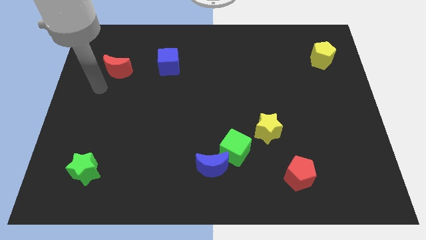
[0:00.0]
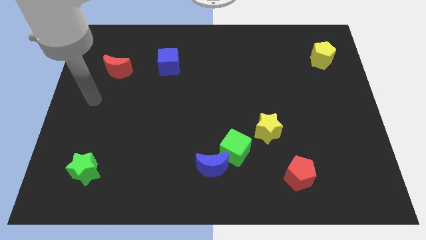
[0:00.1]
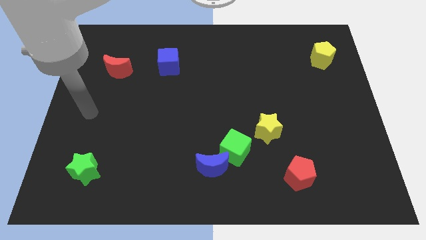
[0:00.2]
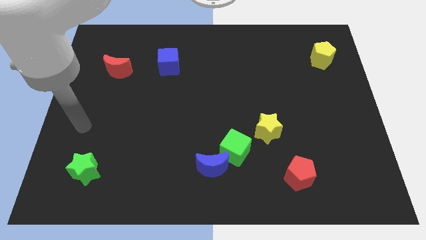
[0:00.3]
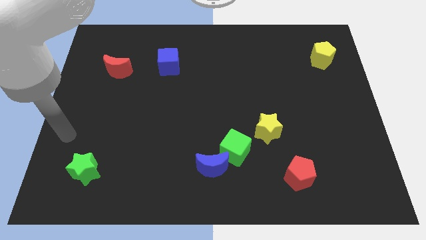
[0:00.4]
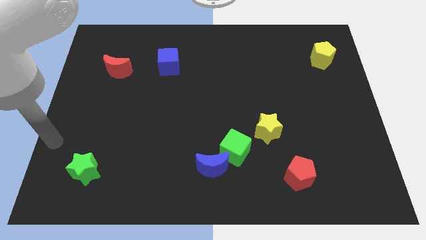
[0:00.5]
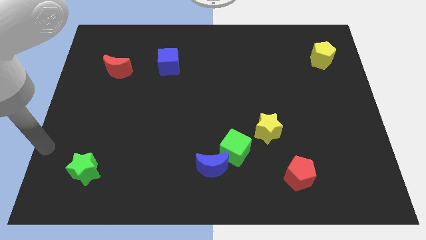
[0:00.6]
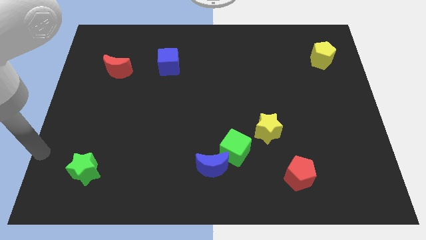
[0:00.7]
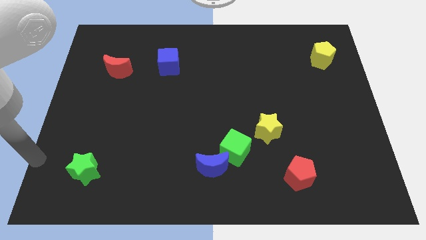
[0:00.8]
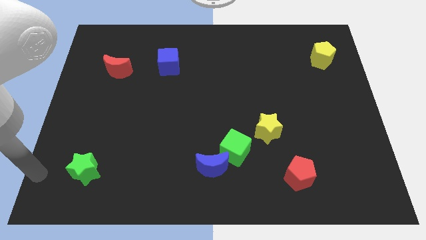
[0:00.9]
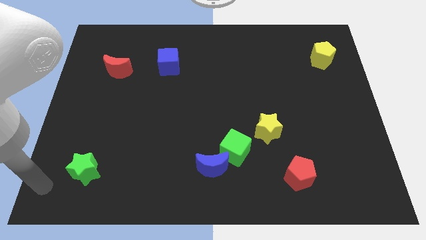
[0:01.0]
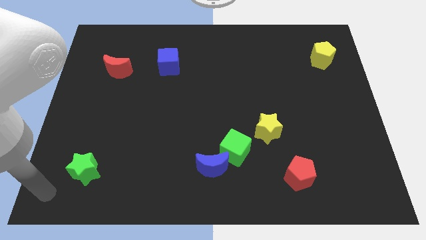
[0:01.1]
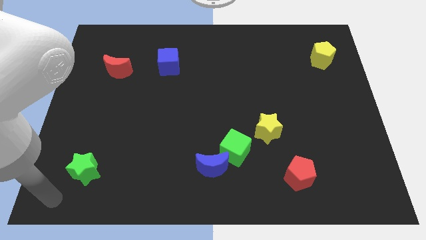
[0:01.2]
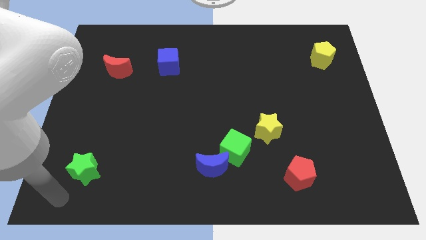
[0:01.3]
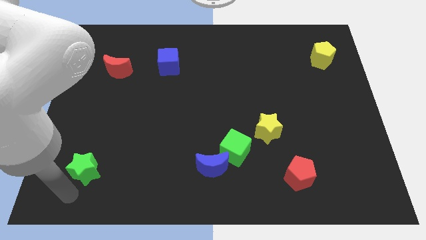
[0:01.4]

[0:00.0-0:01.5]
point the arm towards the bottom side of the green star

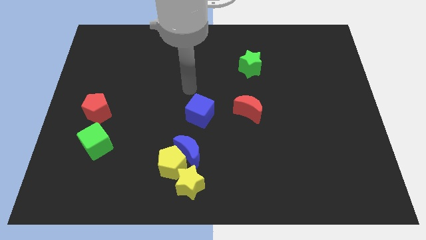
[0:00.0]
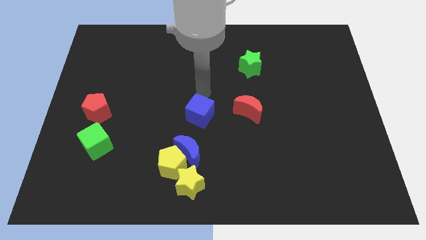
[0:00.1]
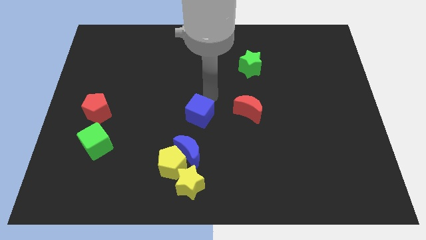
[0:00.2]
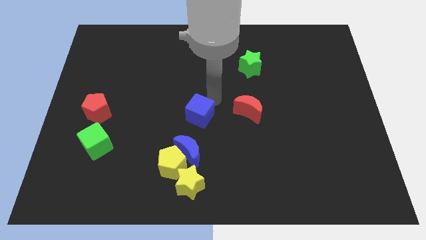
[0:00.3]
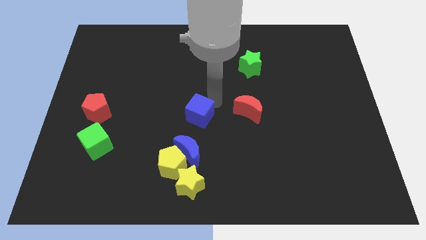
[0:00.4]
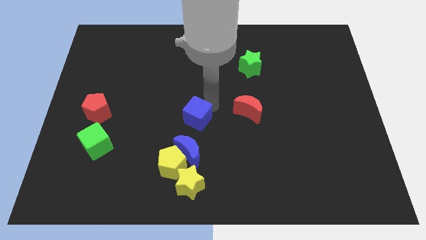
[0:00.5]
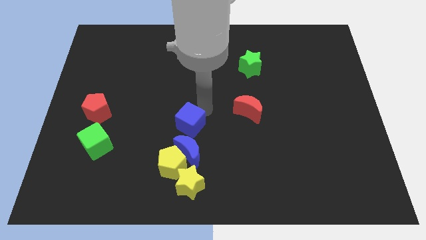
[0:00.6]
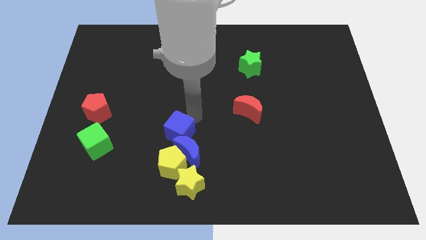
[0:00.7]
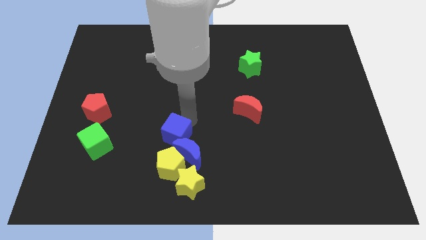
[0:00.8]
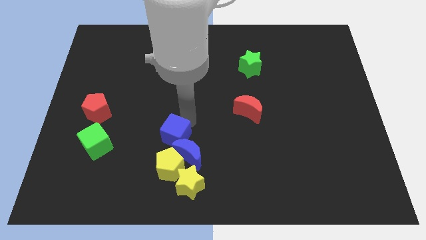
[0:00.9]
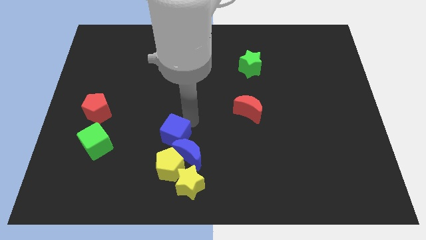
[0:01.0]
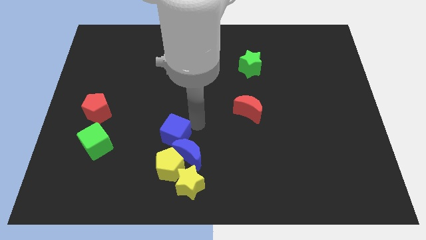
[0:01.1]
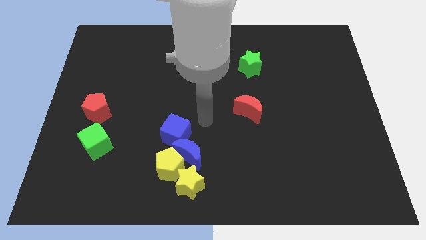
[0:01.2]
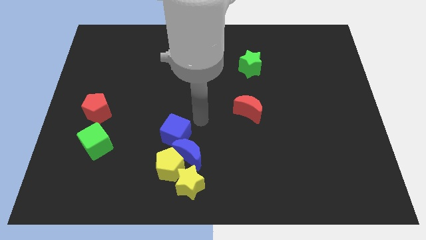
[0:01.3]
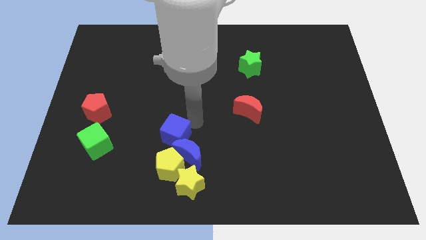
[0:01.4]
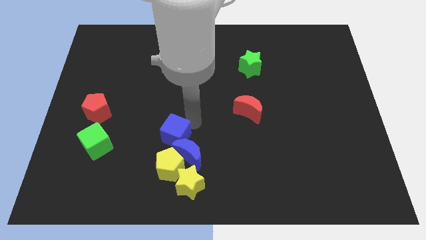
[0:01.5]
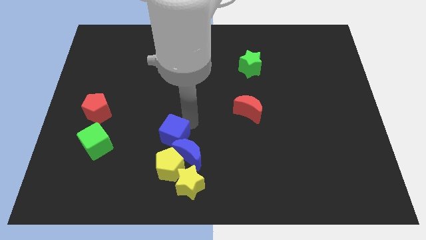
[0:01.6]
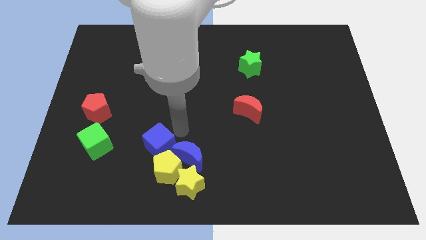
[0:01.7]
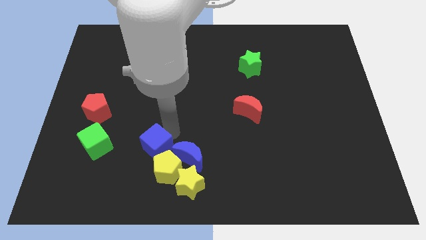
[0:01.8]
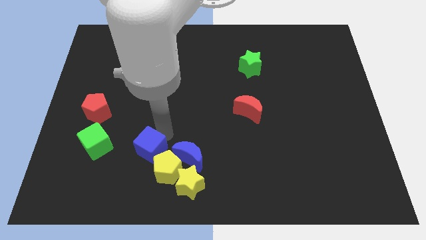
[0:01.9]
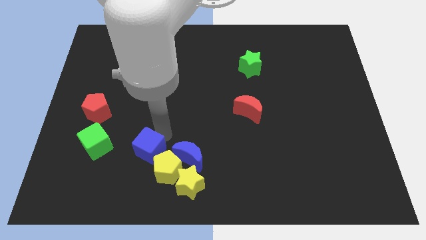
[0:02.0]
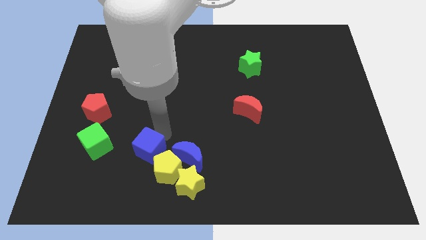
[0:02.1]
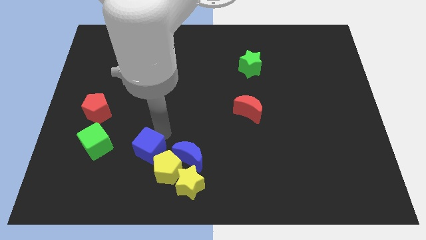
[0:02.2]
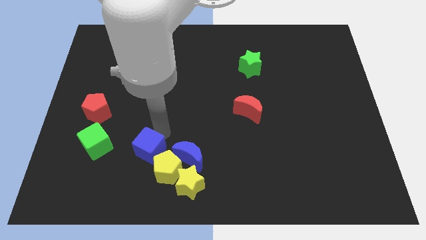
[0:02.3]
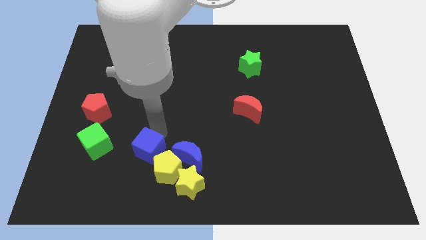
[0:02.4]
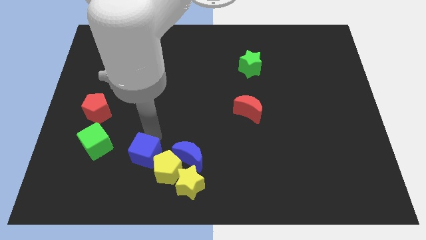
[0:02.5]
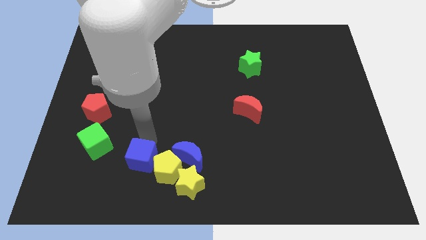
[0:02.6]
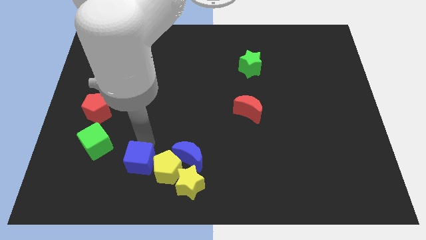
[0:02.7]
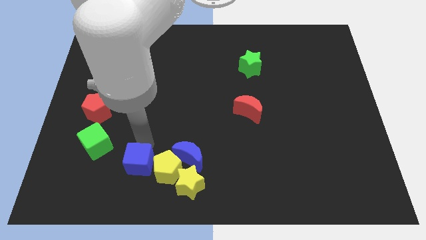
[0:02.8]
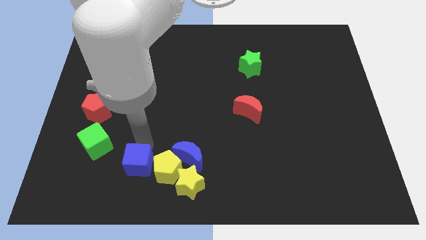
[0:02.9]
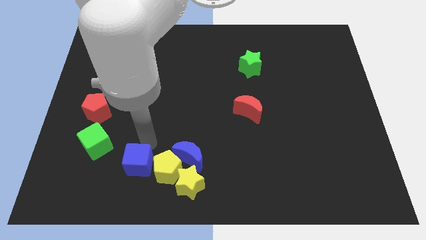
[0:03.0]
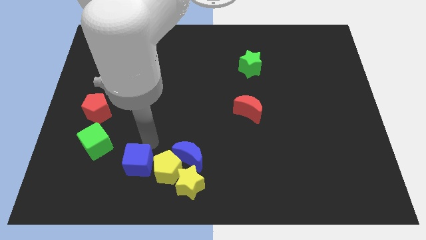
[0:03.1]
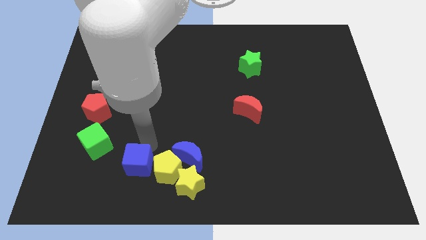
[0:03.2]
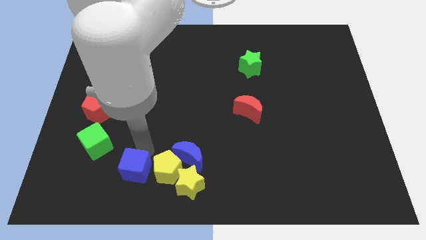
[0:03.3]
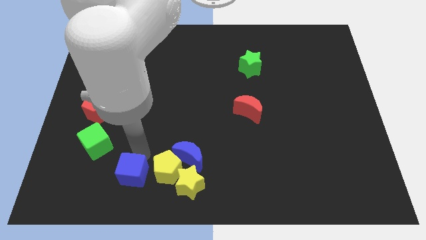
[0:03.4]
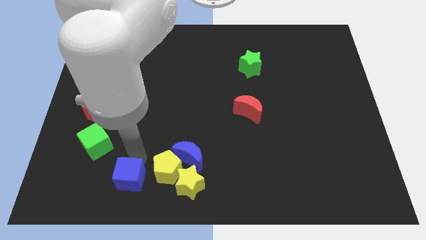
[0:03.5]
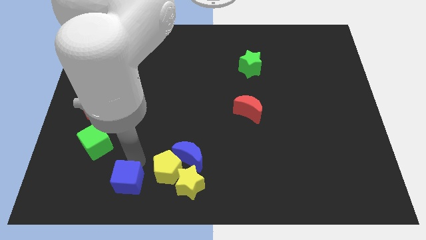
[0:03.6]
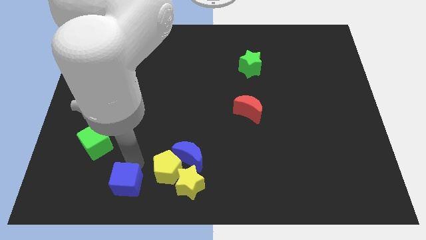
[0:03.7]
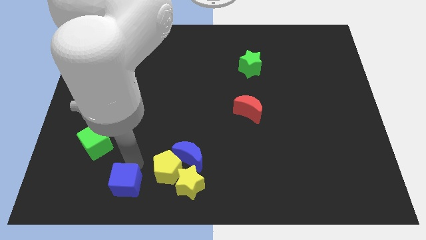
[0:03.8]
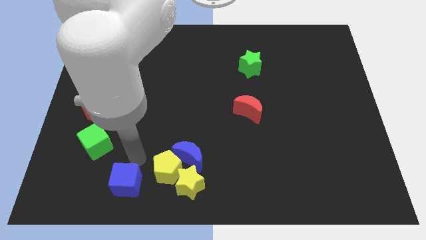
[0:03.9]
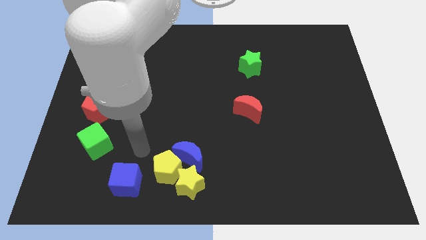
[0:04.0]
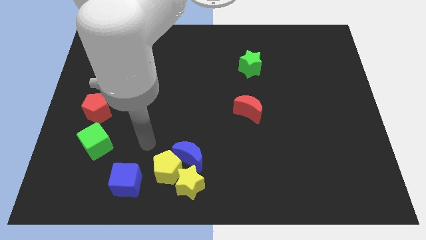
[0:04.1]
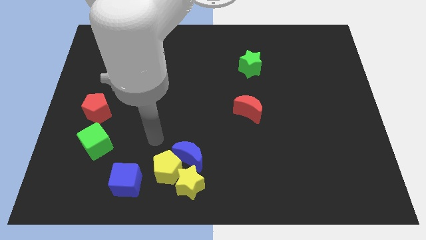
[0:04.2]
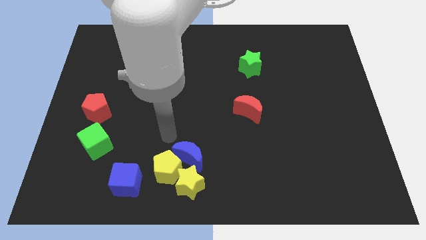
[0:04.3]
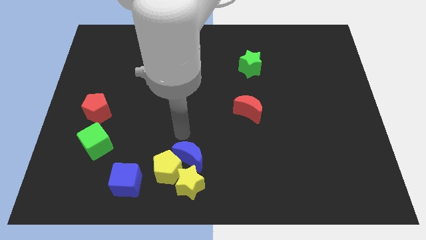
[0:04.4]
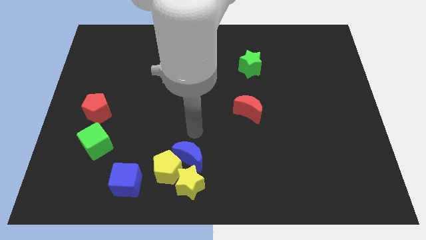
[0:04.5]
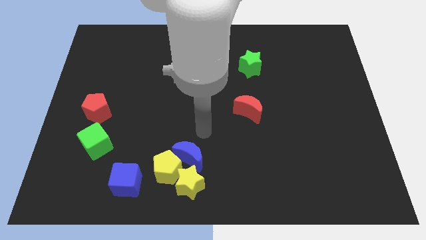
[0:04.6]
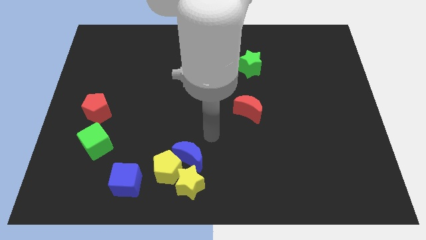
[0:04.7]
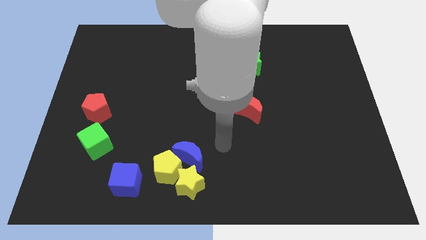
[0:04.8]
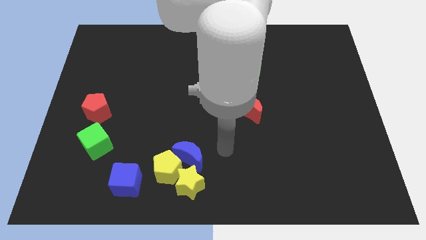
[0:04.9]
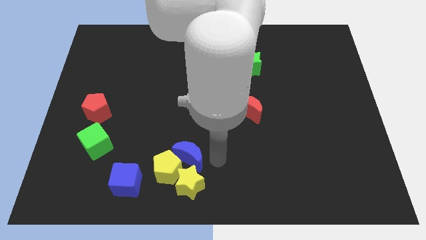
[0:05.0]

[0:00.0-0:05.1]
place the blue cube left of yellow pentagon

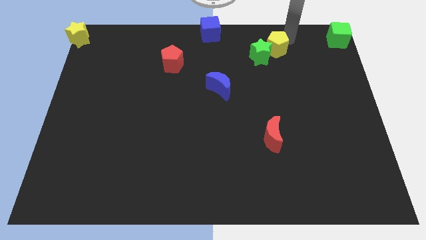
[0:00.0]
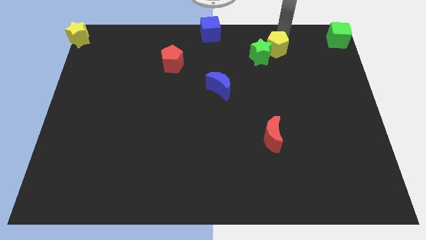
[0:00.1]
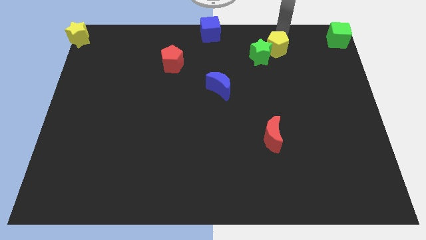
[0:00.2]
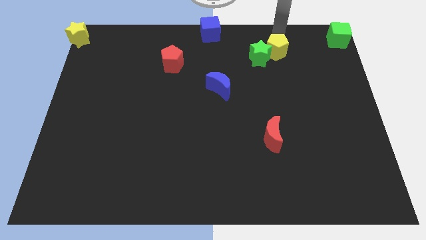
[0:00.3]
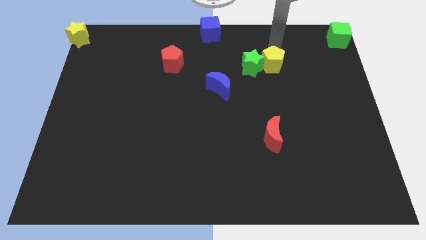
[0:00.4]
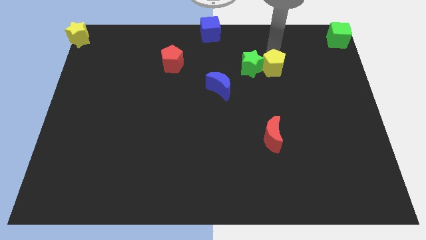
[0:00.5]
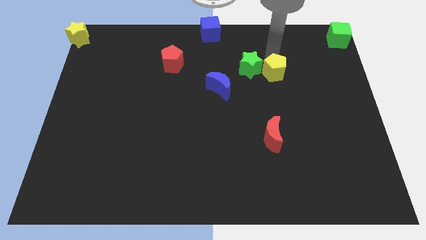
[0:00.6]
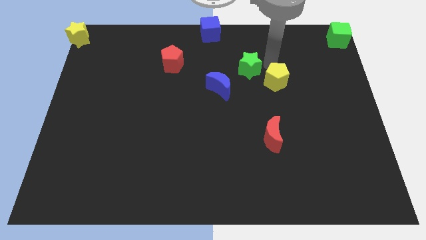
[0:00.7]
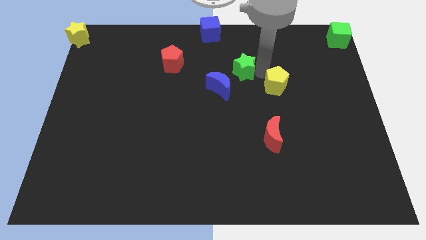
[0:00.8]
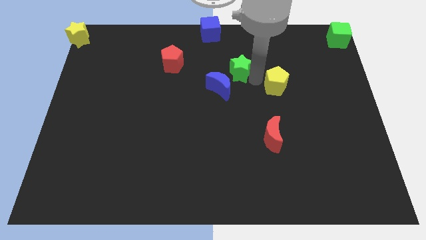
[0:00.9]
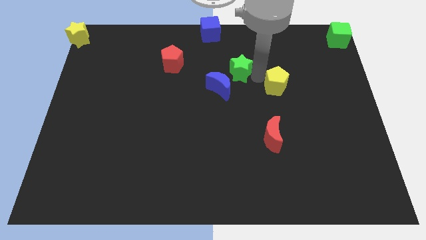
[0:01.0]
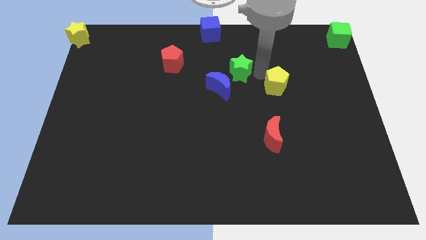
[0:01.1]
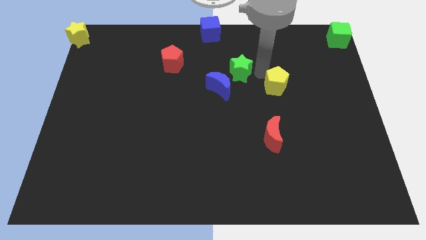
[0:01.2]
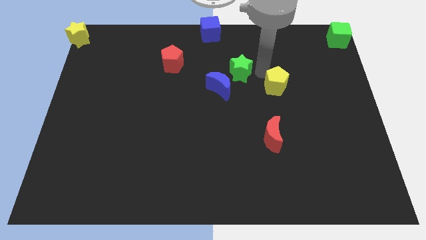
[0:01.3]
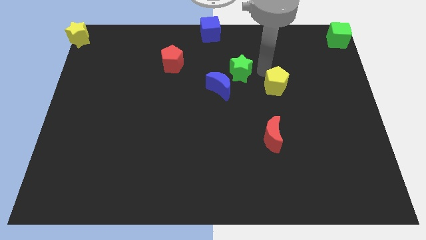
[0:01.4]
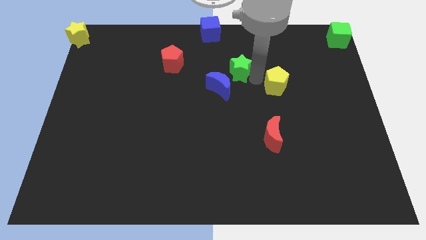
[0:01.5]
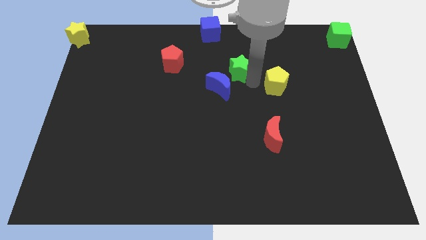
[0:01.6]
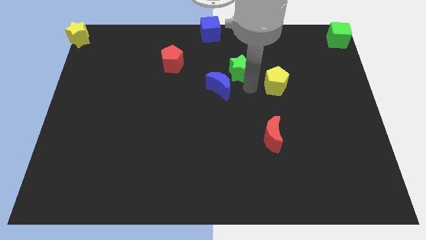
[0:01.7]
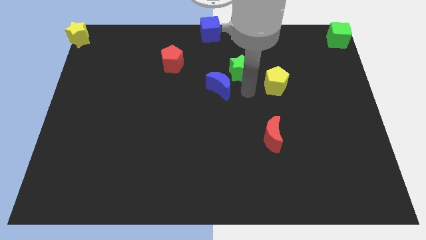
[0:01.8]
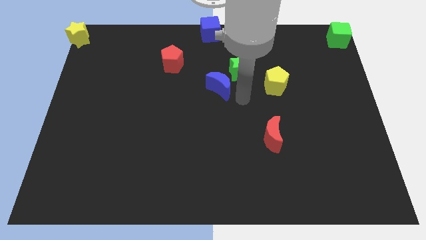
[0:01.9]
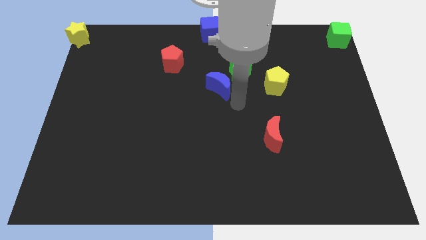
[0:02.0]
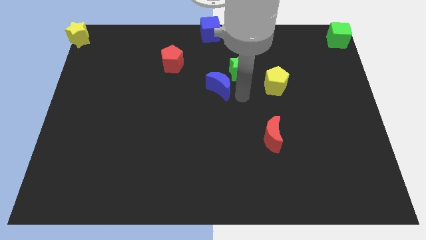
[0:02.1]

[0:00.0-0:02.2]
separate the green star and yellow pentagon
